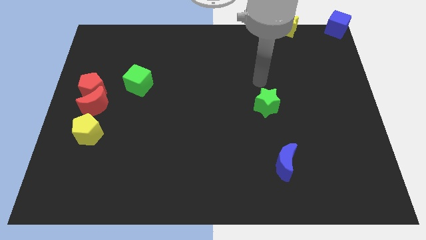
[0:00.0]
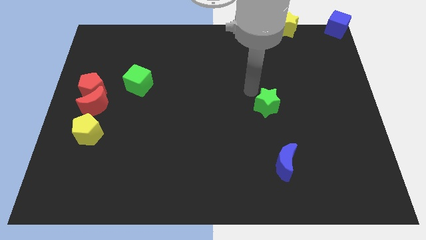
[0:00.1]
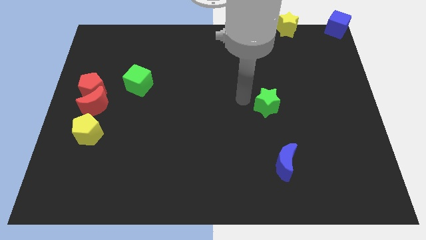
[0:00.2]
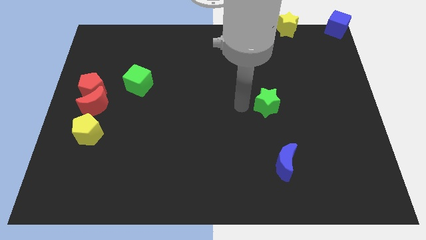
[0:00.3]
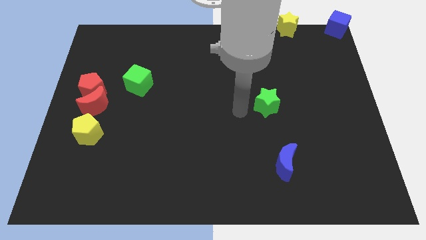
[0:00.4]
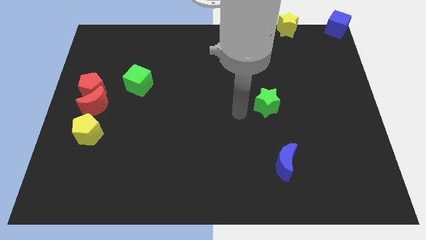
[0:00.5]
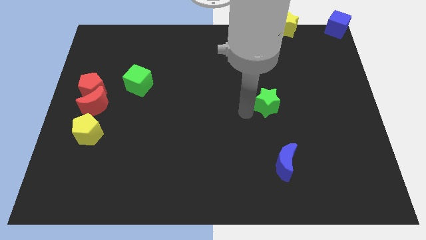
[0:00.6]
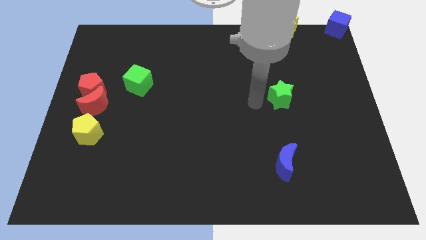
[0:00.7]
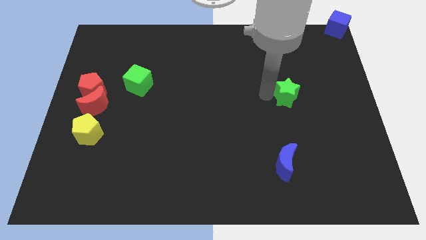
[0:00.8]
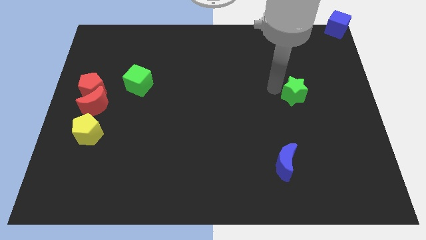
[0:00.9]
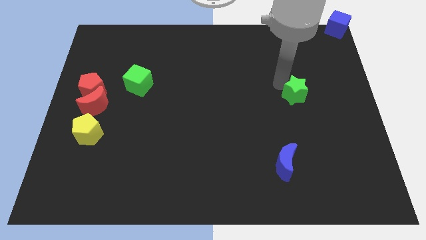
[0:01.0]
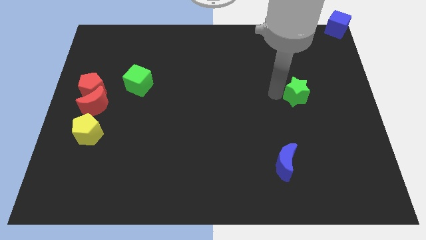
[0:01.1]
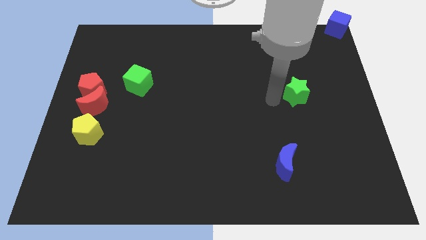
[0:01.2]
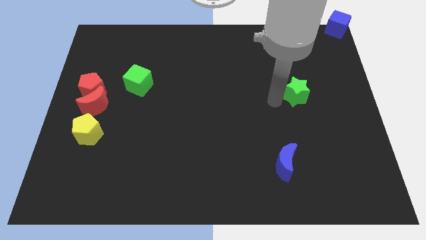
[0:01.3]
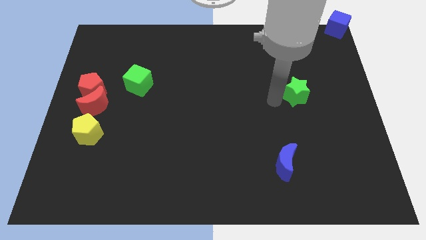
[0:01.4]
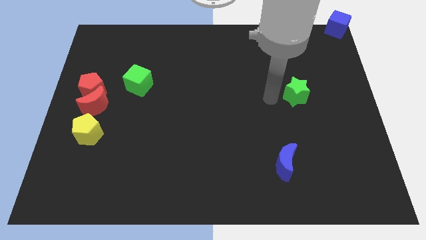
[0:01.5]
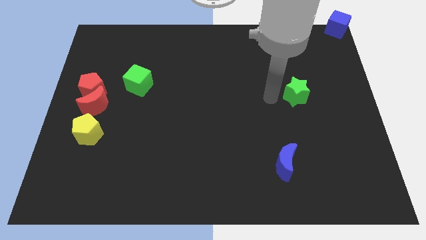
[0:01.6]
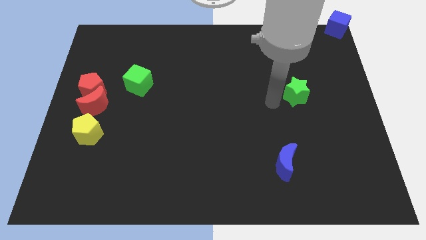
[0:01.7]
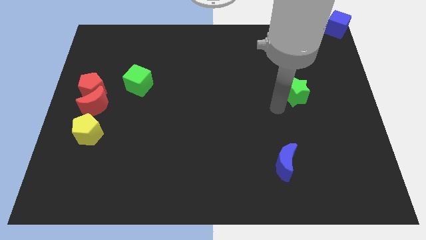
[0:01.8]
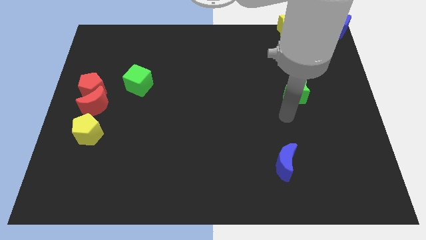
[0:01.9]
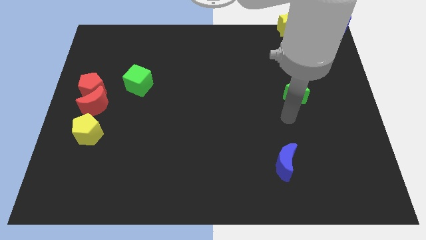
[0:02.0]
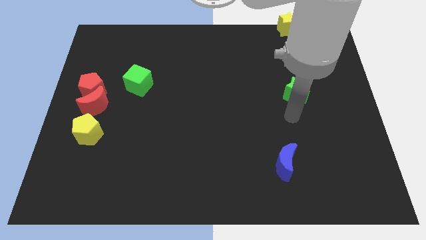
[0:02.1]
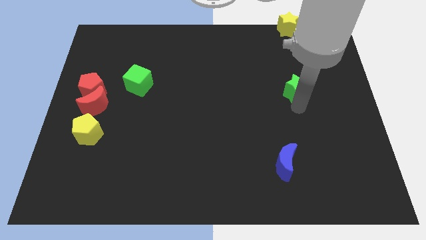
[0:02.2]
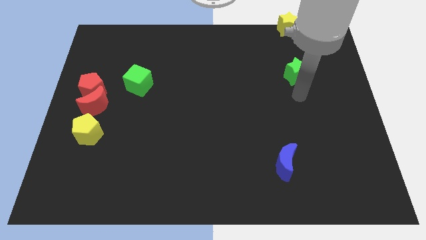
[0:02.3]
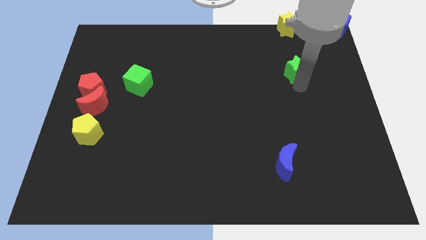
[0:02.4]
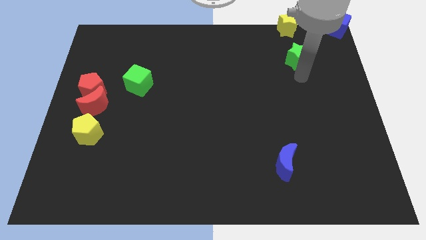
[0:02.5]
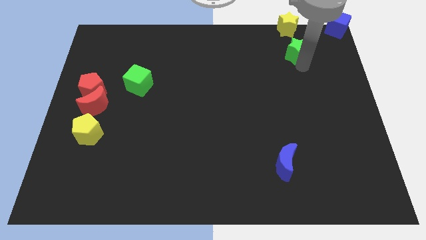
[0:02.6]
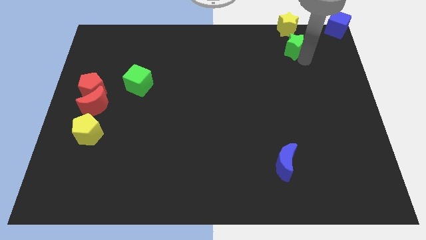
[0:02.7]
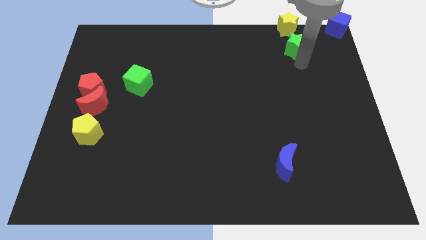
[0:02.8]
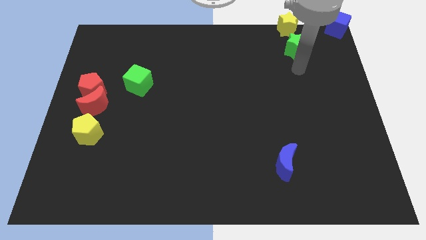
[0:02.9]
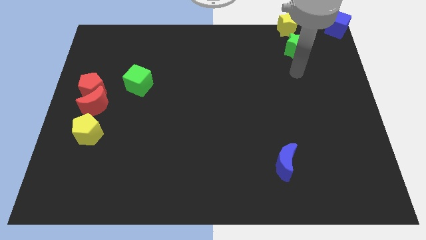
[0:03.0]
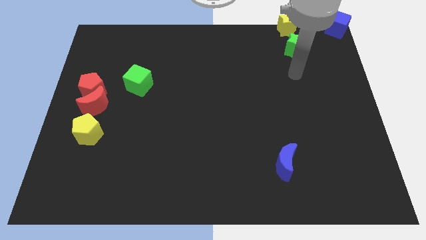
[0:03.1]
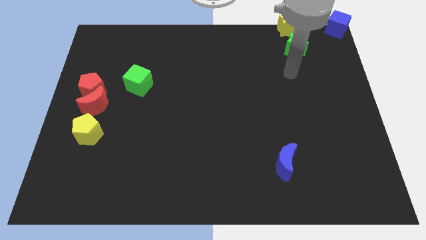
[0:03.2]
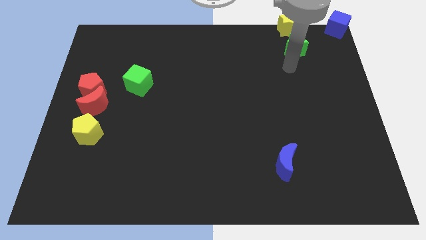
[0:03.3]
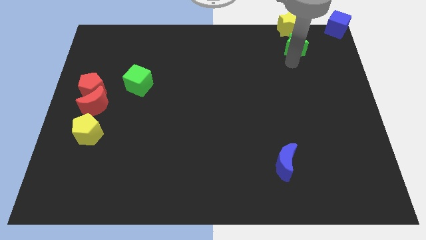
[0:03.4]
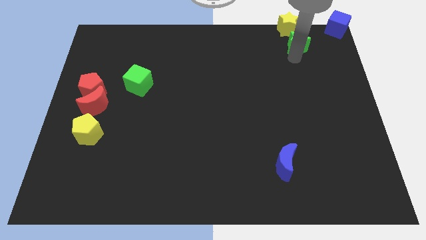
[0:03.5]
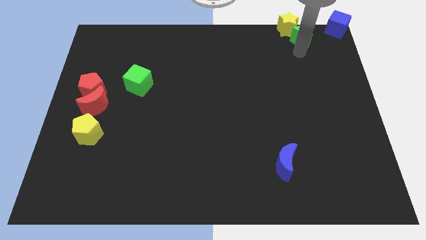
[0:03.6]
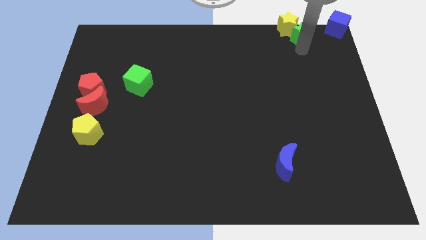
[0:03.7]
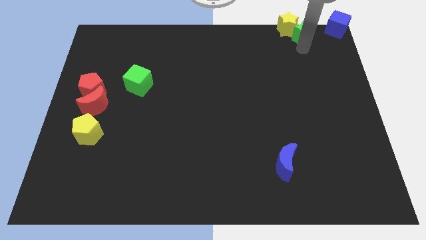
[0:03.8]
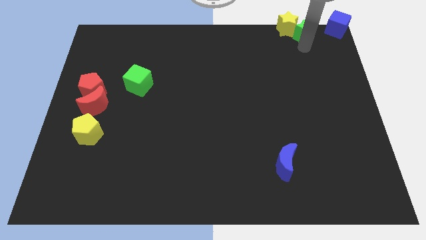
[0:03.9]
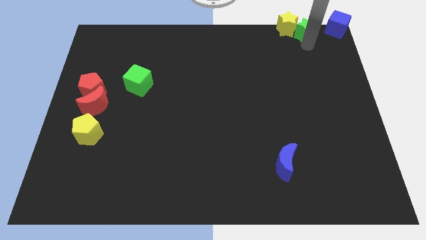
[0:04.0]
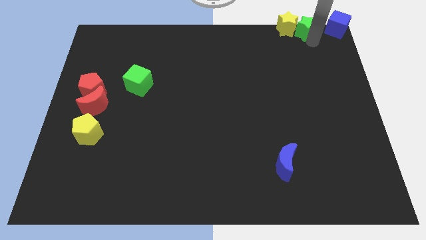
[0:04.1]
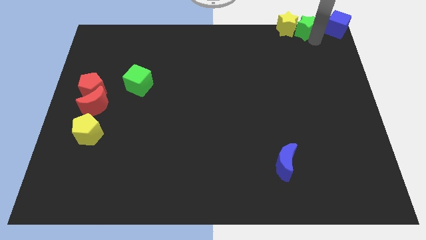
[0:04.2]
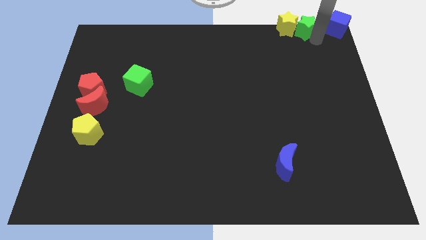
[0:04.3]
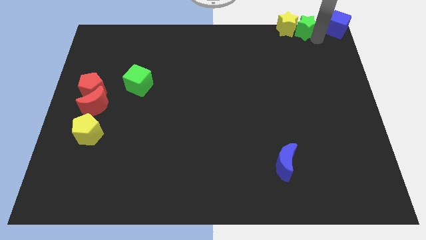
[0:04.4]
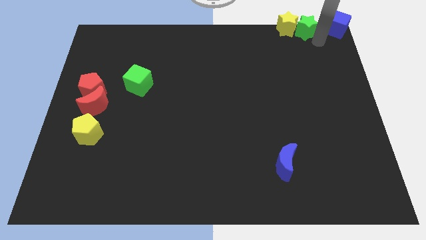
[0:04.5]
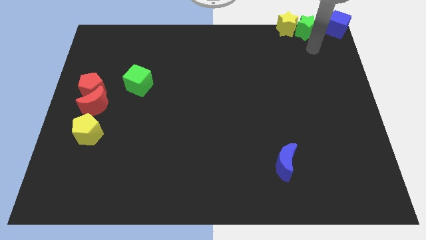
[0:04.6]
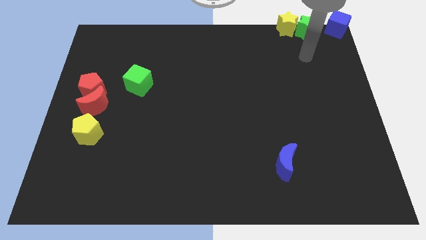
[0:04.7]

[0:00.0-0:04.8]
place the green star in between the yellow star and blue cube

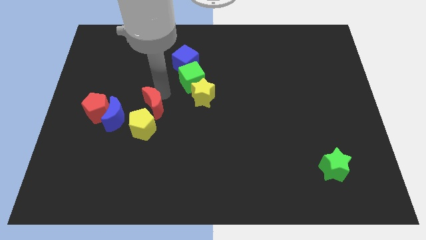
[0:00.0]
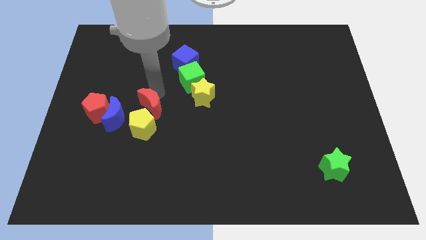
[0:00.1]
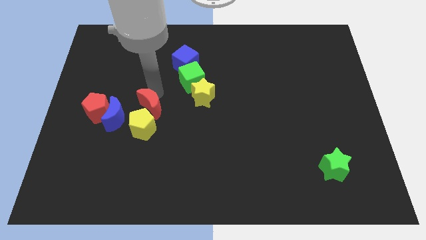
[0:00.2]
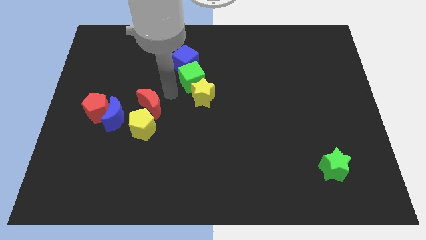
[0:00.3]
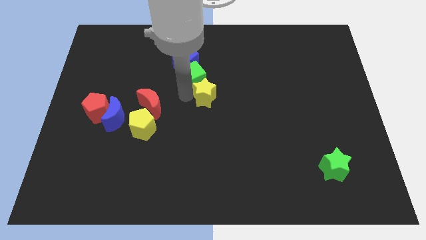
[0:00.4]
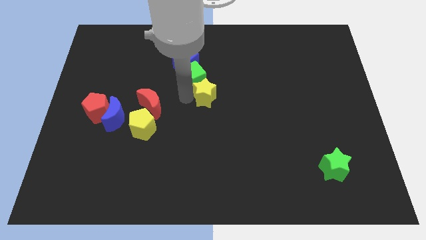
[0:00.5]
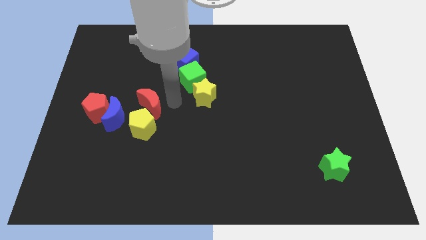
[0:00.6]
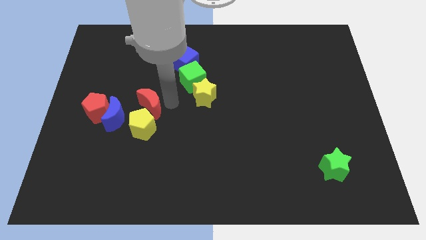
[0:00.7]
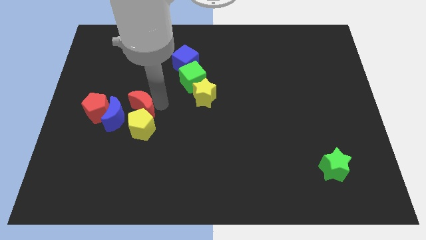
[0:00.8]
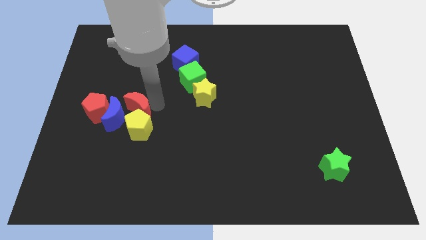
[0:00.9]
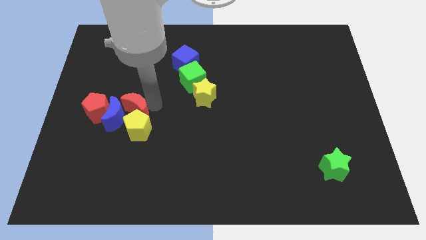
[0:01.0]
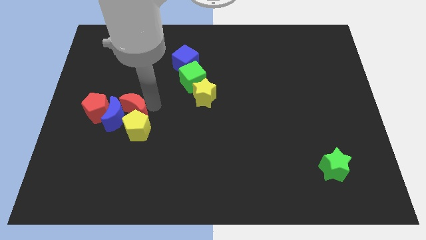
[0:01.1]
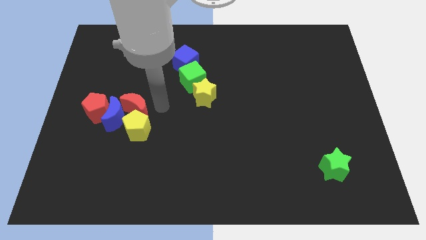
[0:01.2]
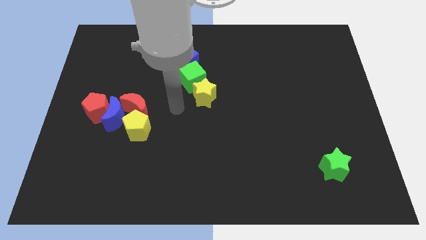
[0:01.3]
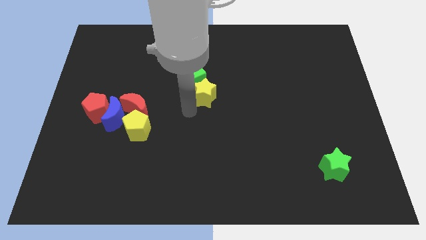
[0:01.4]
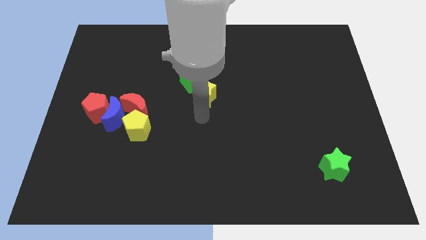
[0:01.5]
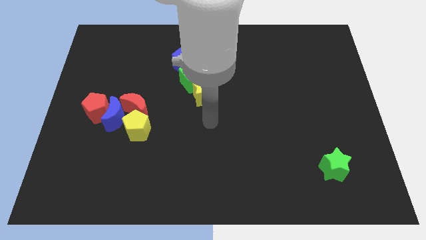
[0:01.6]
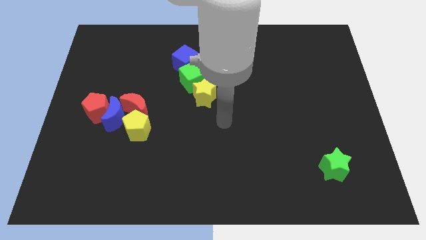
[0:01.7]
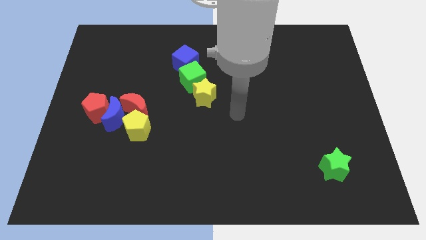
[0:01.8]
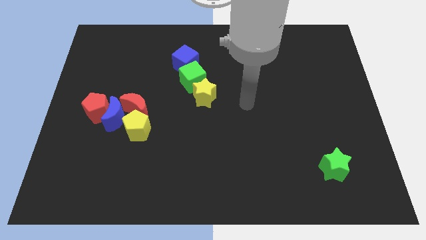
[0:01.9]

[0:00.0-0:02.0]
move the red moon into the blue moon and yellow pentagon

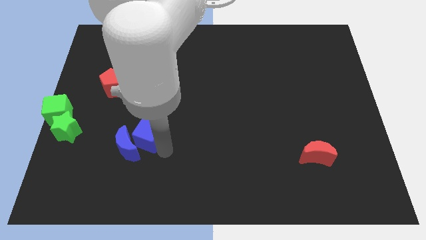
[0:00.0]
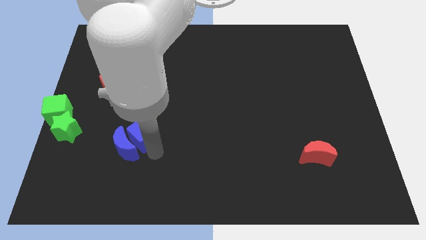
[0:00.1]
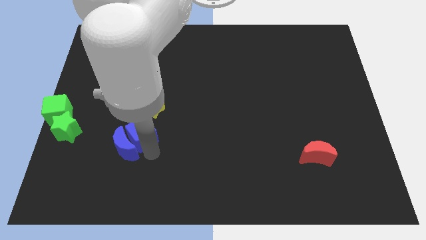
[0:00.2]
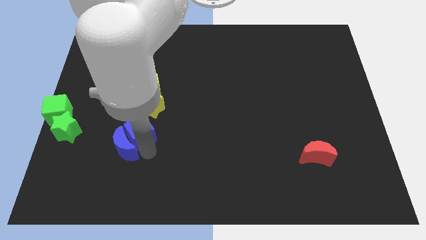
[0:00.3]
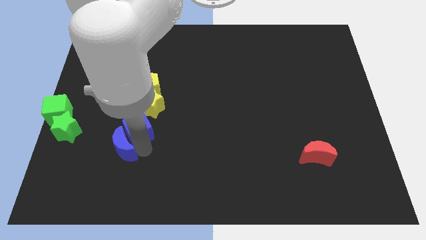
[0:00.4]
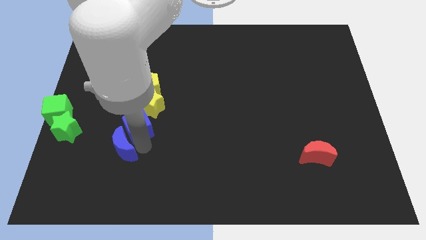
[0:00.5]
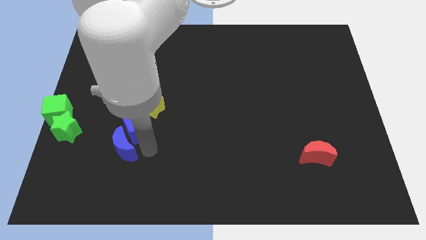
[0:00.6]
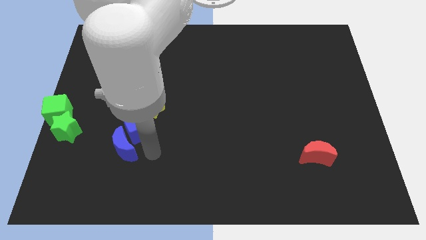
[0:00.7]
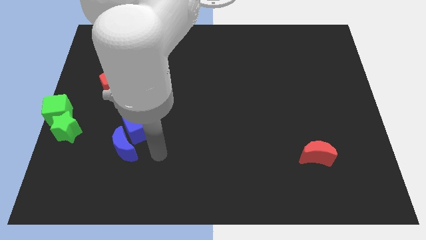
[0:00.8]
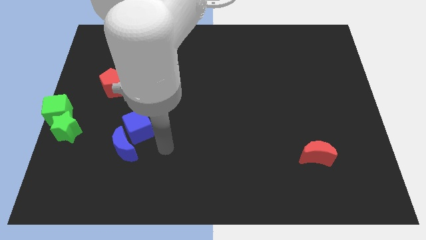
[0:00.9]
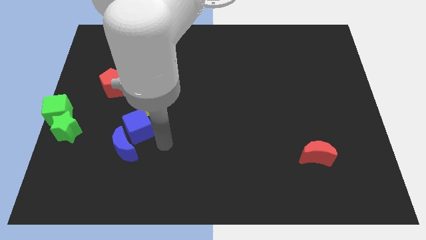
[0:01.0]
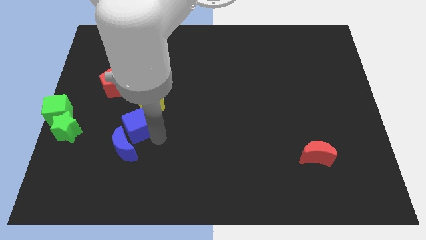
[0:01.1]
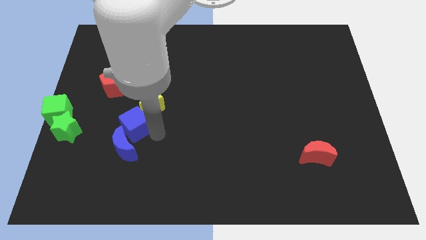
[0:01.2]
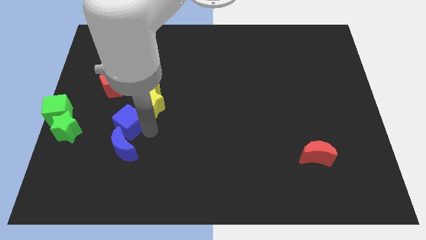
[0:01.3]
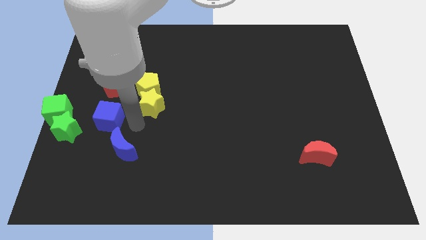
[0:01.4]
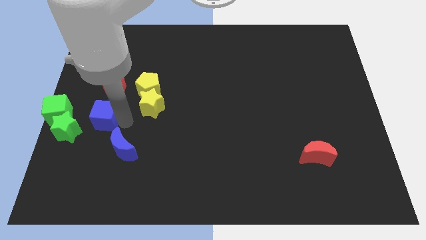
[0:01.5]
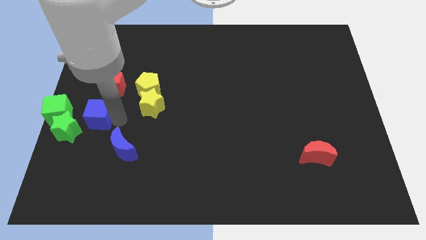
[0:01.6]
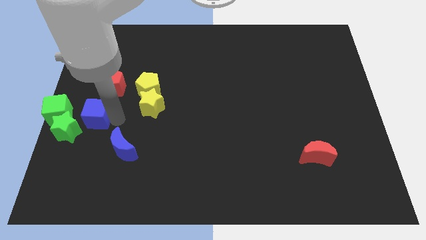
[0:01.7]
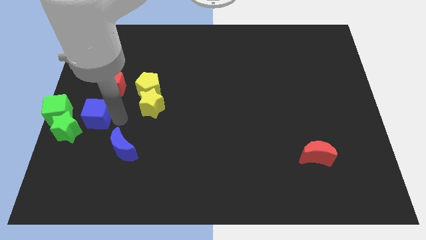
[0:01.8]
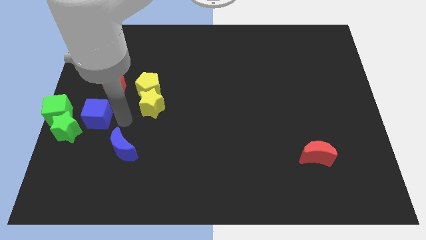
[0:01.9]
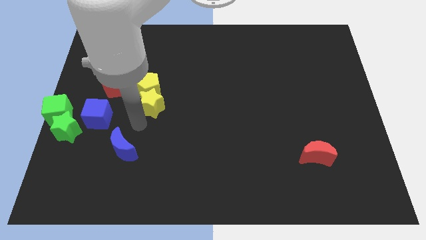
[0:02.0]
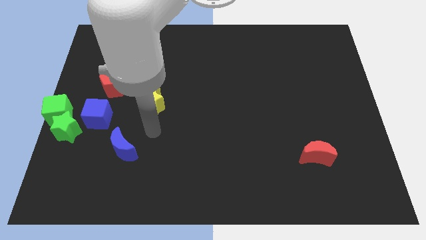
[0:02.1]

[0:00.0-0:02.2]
separate the blue cube to the left of green blocks
